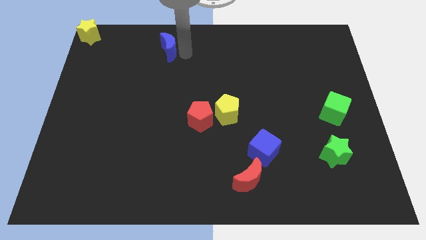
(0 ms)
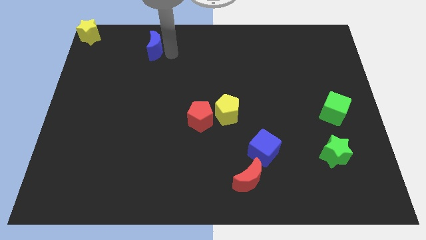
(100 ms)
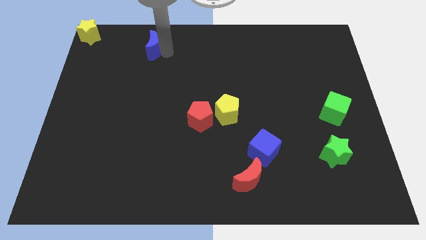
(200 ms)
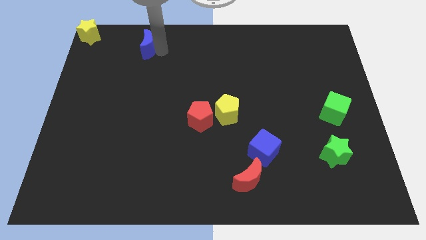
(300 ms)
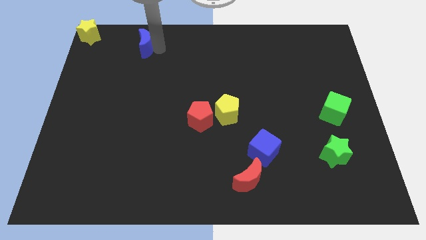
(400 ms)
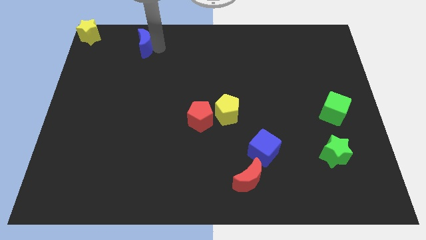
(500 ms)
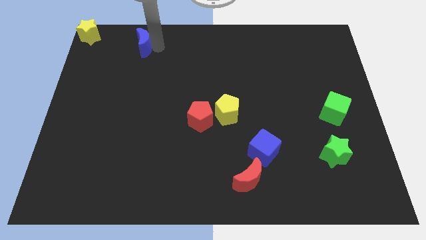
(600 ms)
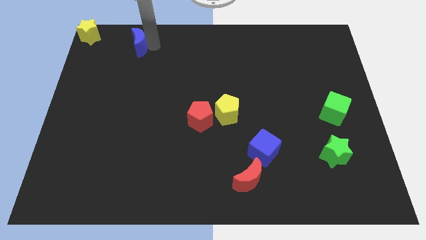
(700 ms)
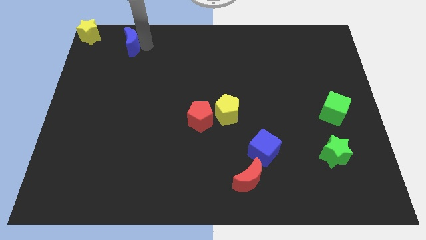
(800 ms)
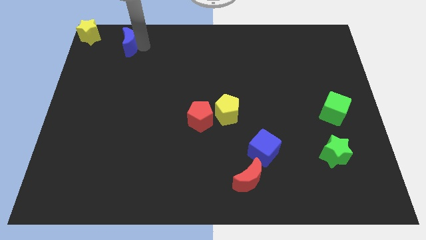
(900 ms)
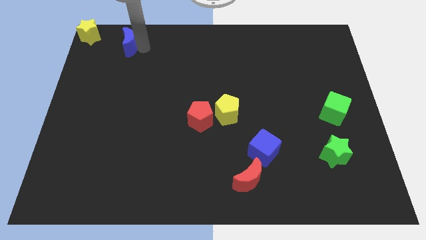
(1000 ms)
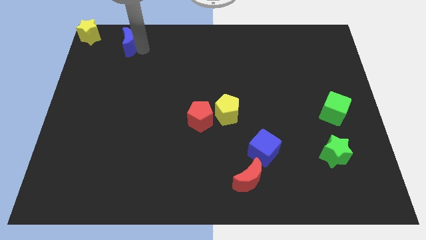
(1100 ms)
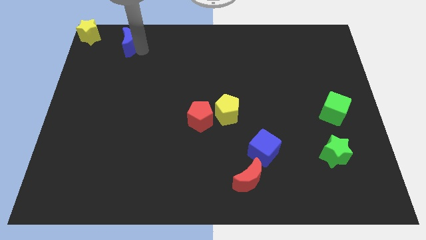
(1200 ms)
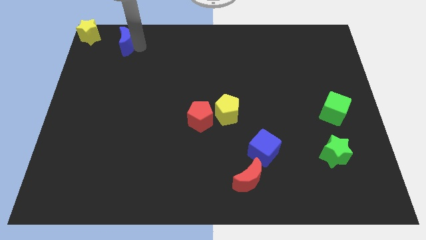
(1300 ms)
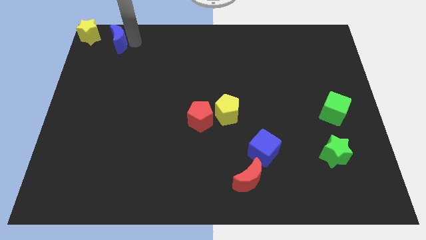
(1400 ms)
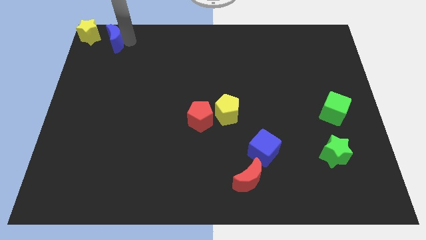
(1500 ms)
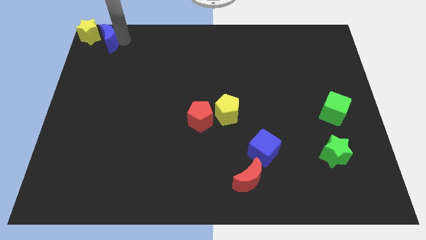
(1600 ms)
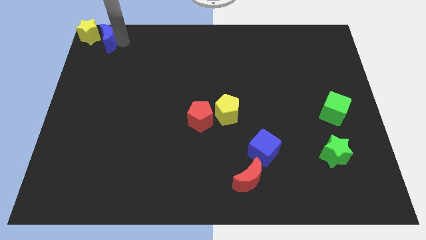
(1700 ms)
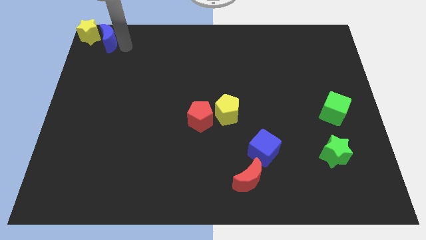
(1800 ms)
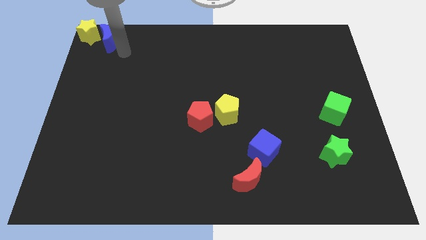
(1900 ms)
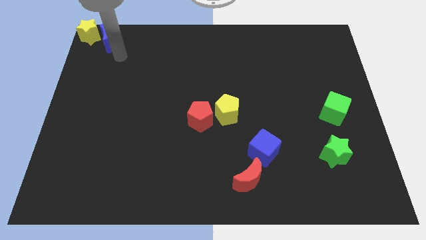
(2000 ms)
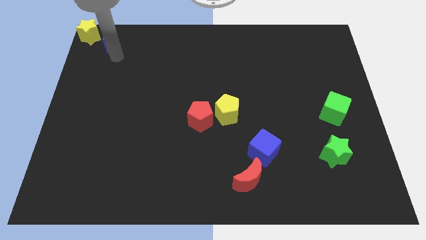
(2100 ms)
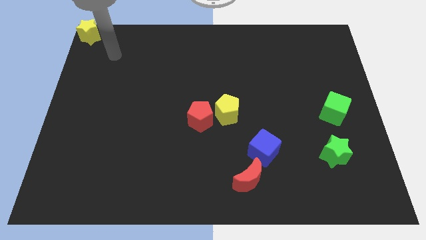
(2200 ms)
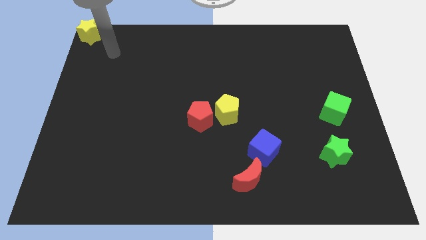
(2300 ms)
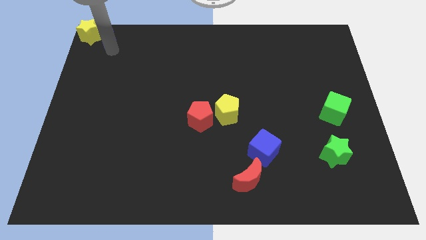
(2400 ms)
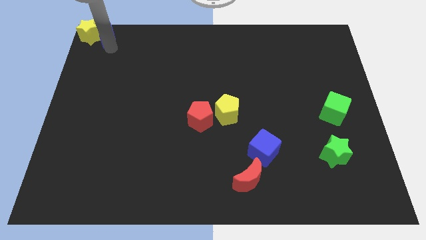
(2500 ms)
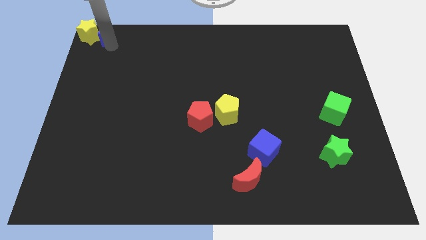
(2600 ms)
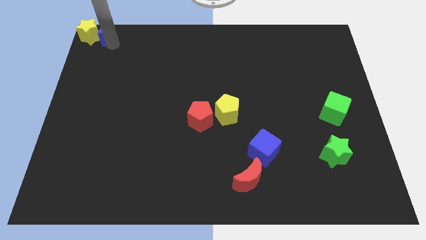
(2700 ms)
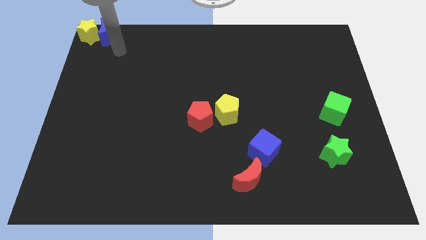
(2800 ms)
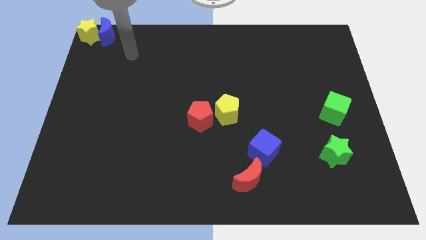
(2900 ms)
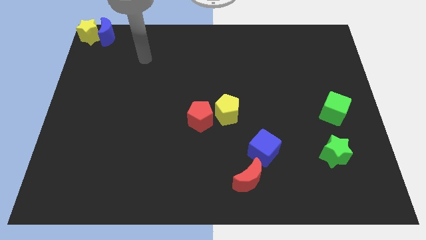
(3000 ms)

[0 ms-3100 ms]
slide blue moon into yellow star

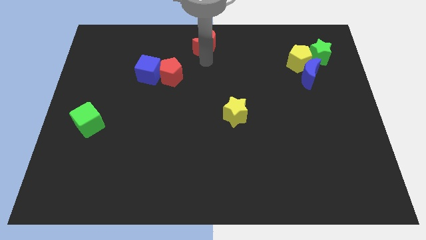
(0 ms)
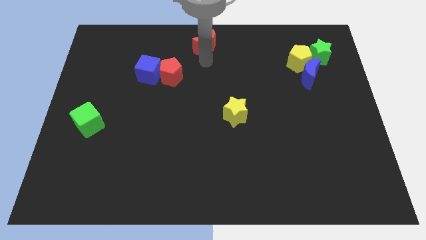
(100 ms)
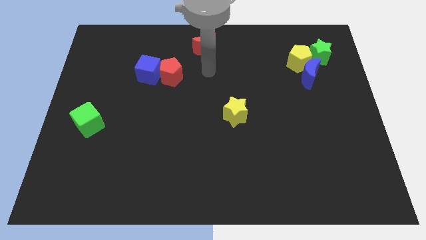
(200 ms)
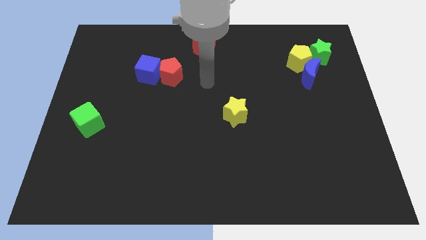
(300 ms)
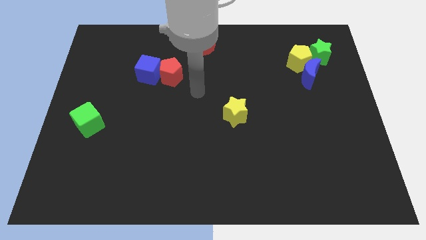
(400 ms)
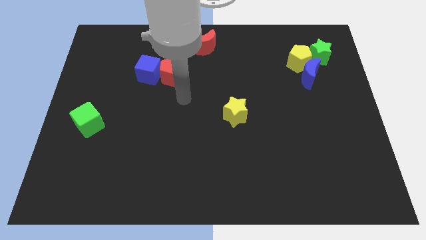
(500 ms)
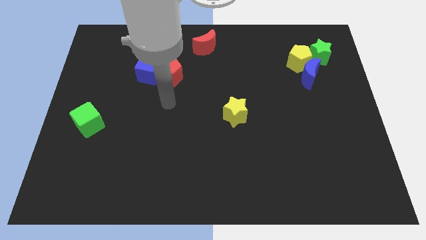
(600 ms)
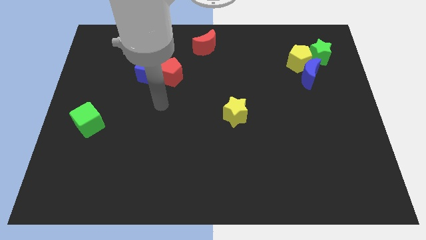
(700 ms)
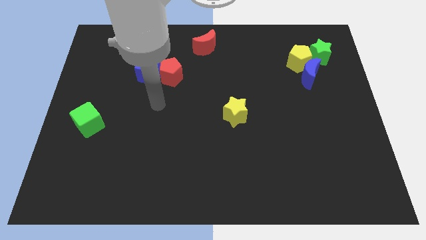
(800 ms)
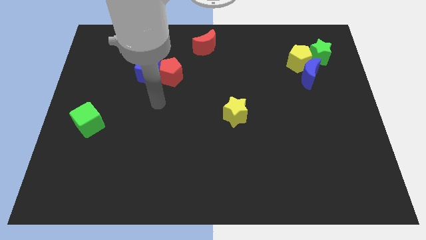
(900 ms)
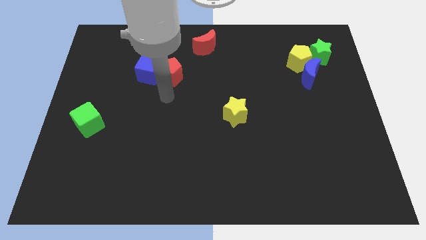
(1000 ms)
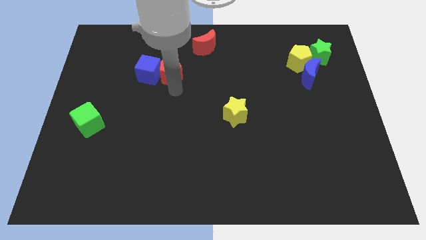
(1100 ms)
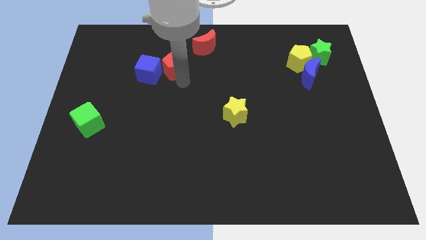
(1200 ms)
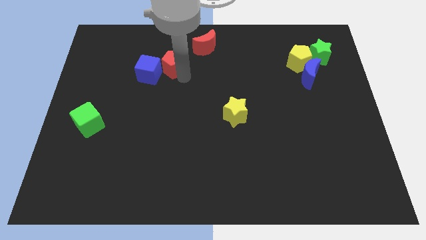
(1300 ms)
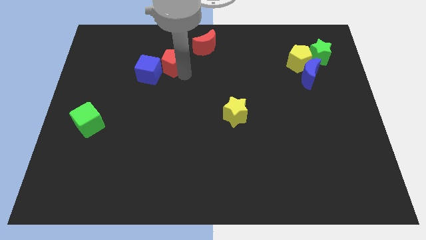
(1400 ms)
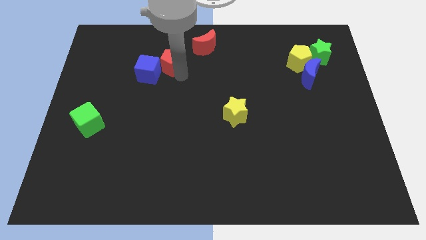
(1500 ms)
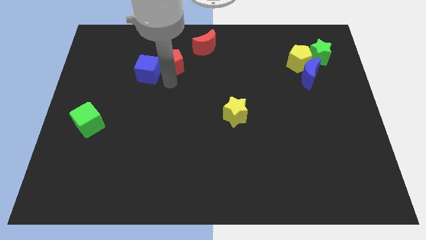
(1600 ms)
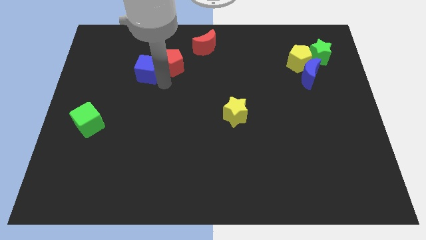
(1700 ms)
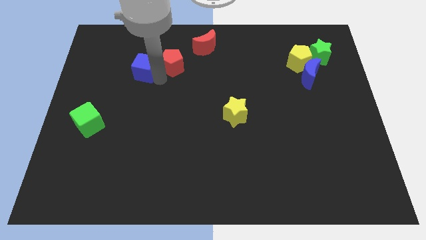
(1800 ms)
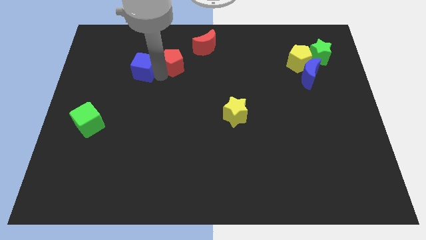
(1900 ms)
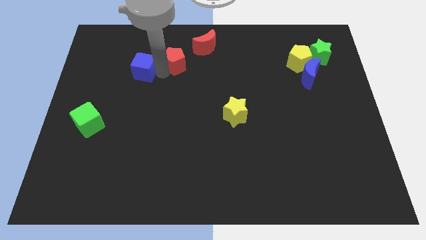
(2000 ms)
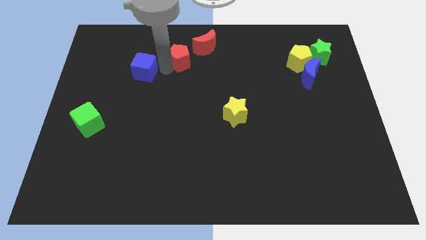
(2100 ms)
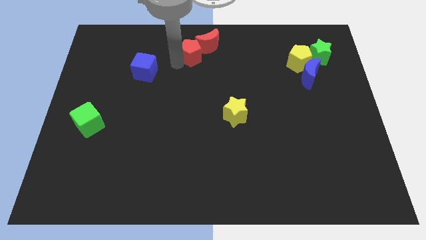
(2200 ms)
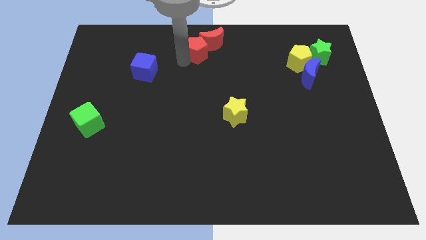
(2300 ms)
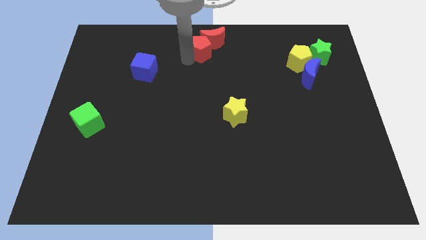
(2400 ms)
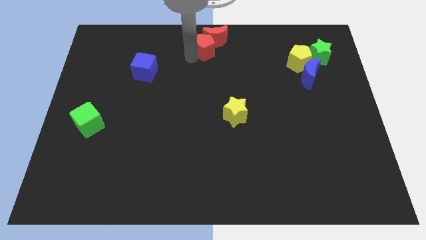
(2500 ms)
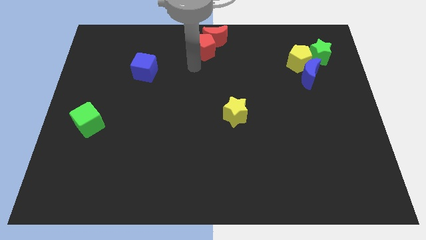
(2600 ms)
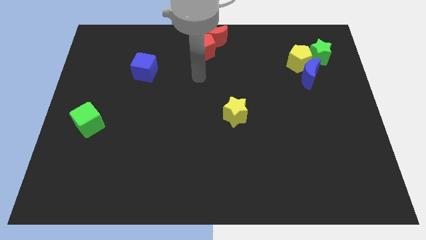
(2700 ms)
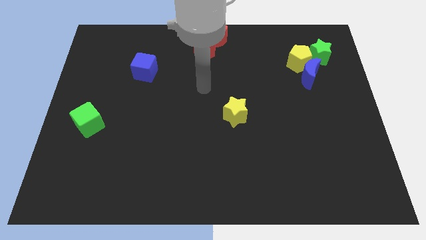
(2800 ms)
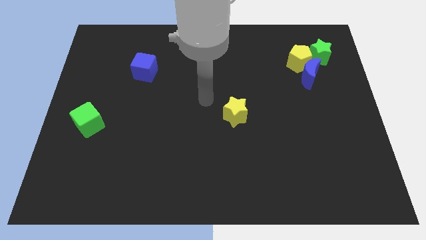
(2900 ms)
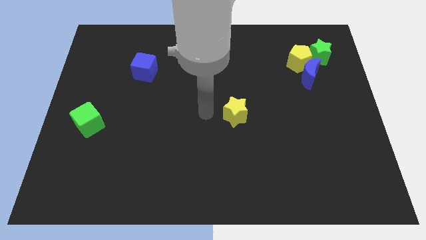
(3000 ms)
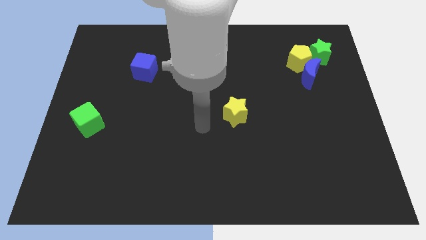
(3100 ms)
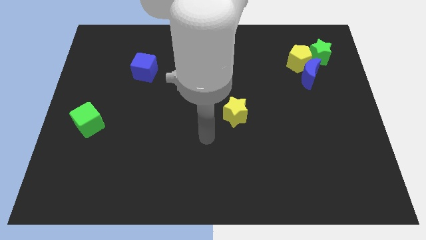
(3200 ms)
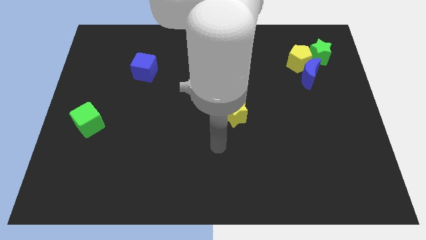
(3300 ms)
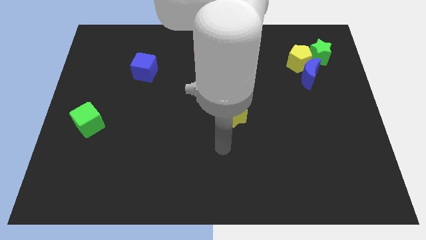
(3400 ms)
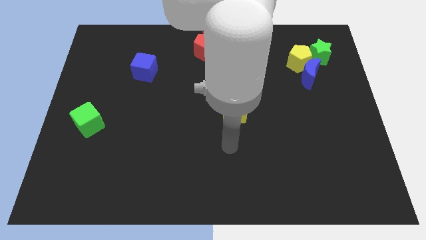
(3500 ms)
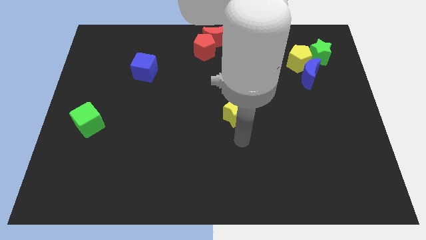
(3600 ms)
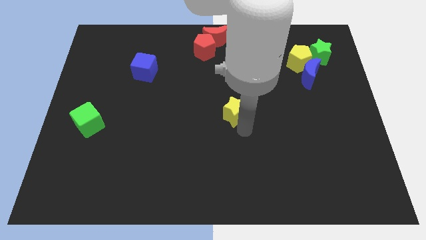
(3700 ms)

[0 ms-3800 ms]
place the red crescent and red pentagon together at the top center of the board

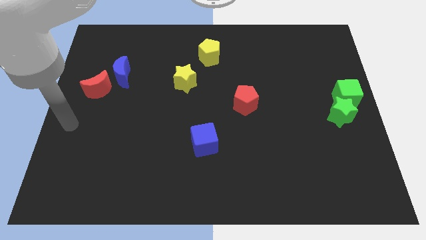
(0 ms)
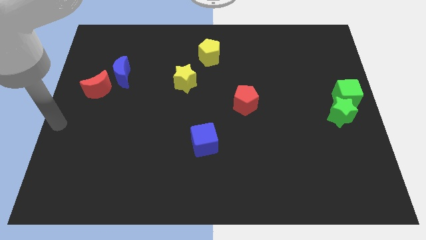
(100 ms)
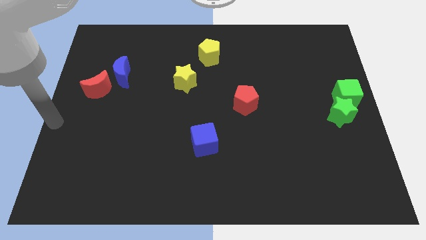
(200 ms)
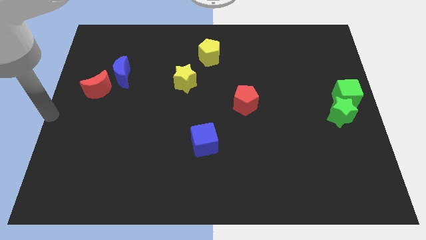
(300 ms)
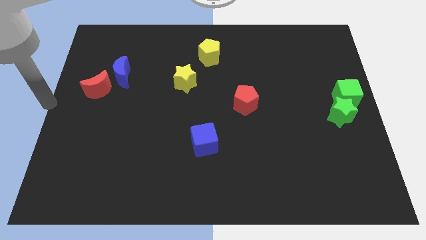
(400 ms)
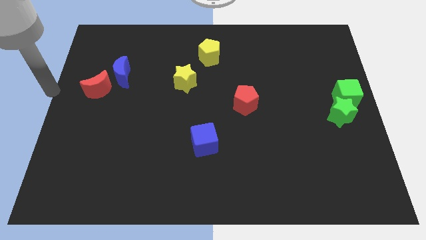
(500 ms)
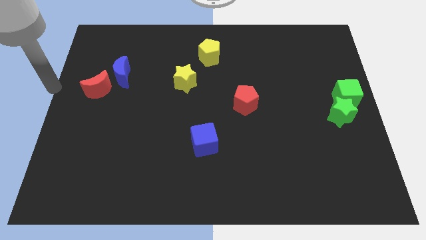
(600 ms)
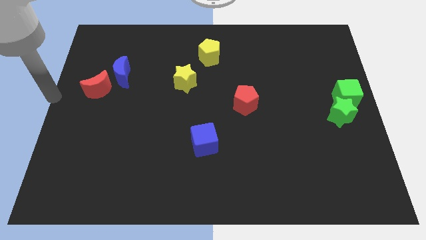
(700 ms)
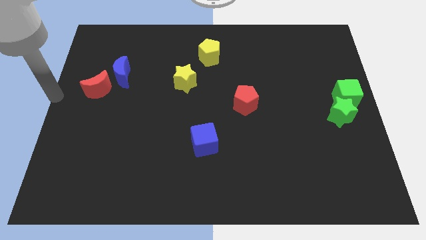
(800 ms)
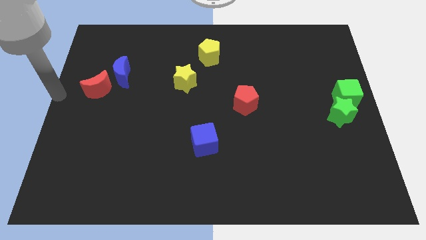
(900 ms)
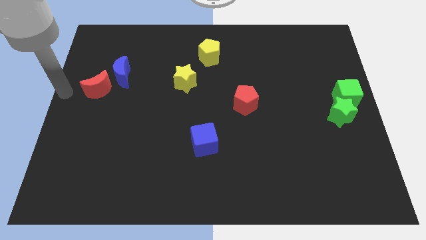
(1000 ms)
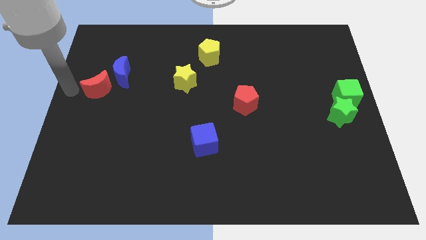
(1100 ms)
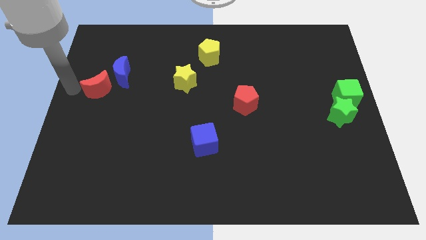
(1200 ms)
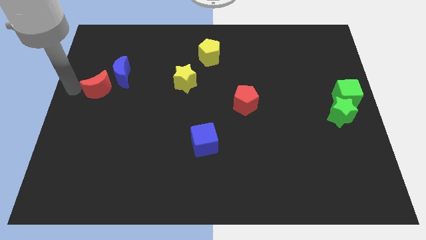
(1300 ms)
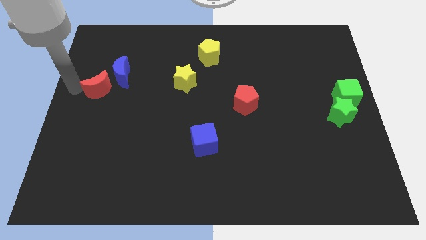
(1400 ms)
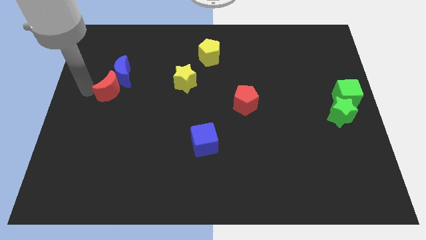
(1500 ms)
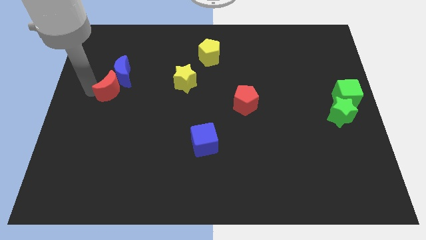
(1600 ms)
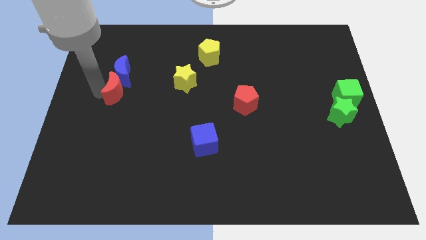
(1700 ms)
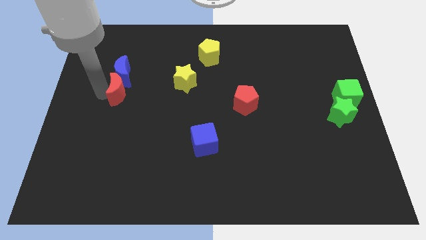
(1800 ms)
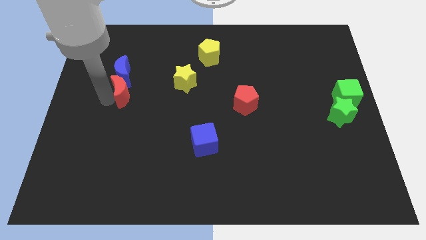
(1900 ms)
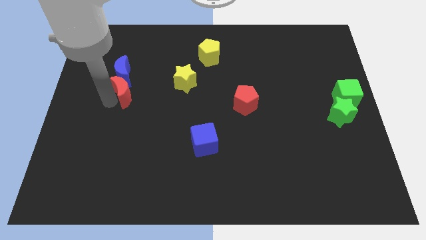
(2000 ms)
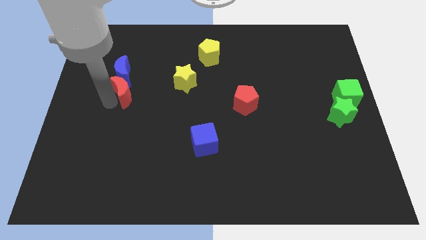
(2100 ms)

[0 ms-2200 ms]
move the red moon below the blue moon
